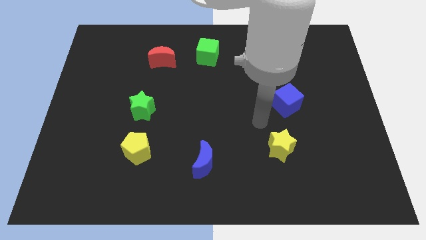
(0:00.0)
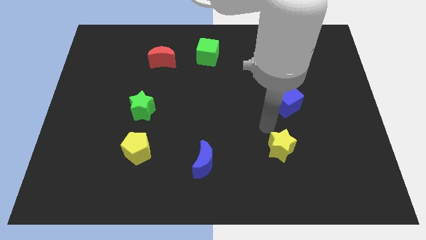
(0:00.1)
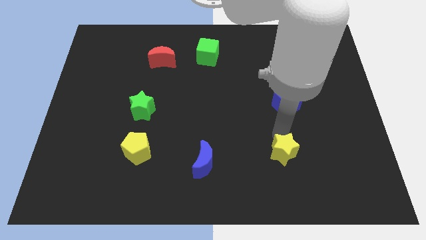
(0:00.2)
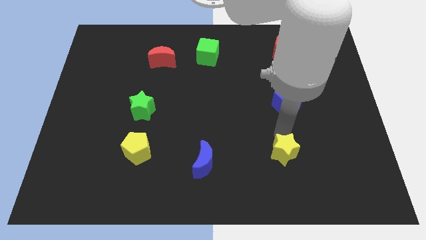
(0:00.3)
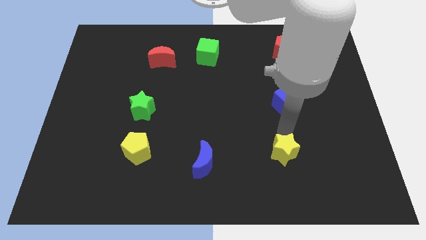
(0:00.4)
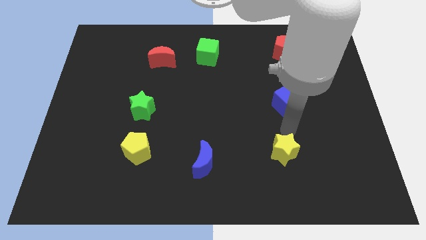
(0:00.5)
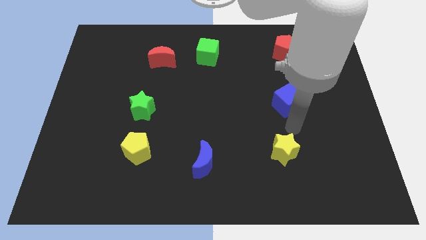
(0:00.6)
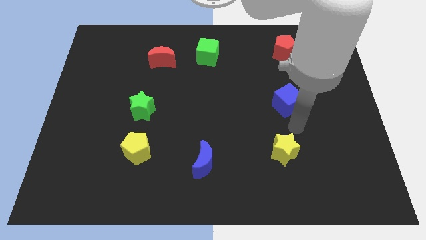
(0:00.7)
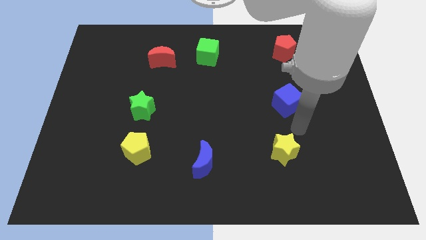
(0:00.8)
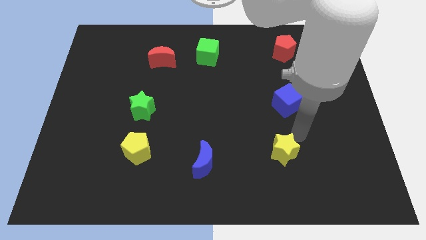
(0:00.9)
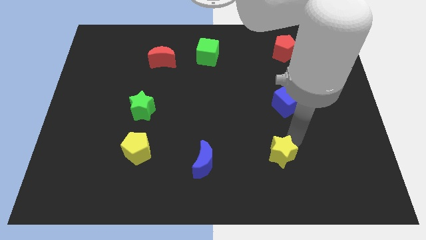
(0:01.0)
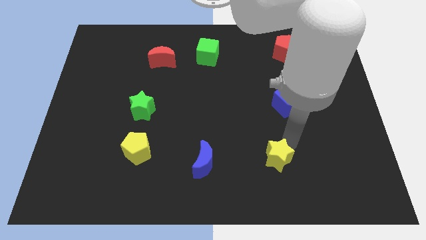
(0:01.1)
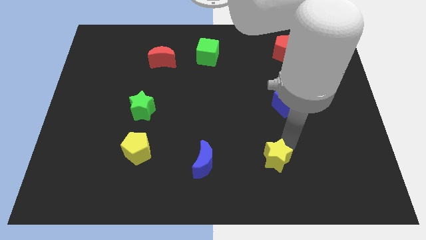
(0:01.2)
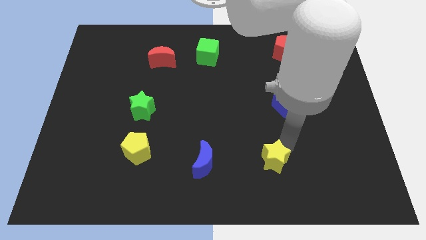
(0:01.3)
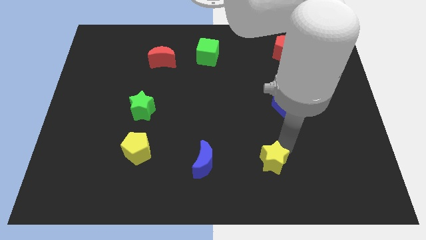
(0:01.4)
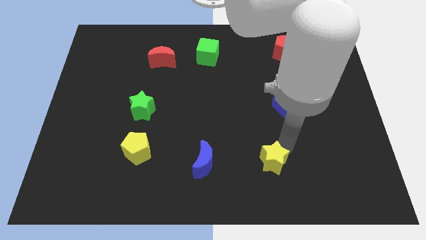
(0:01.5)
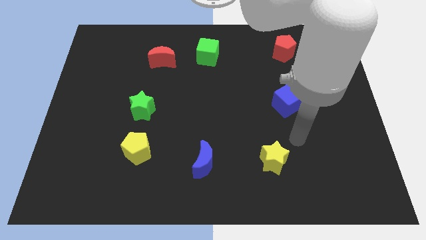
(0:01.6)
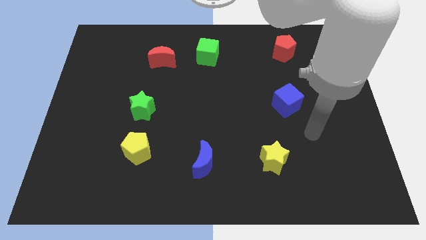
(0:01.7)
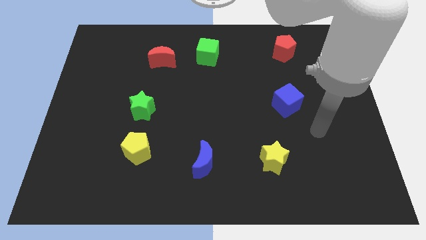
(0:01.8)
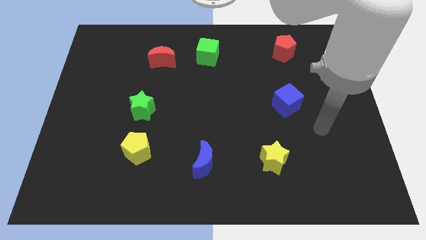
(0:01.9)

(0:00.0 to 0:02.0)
move the yellow star slightly towards bottom center of the board

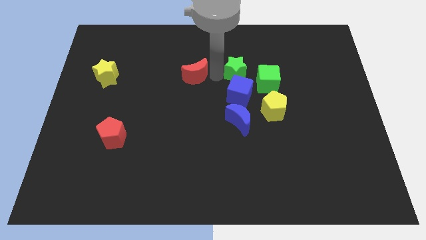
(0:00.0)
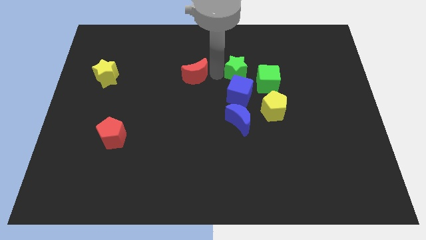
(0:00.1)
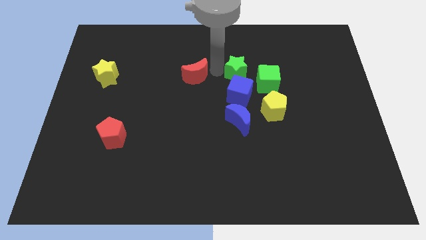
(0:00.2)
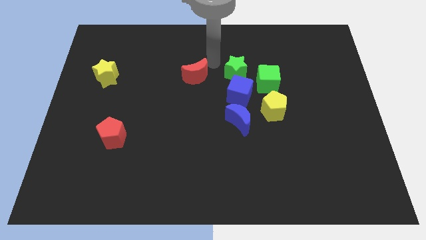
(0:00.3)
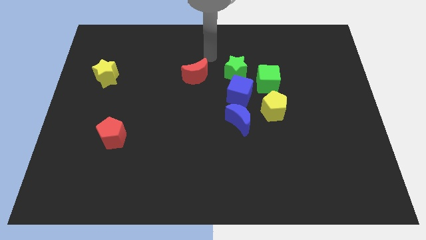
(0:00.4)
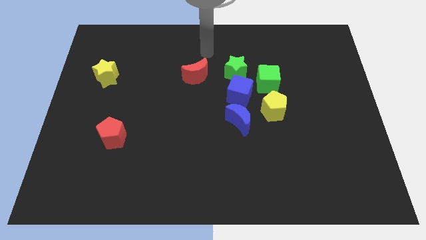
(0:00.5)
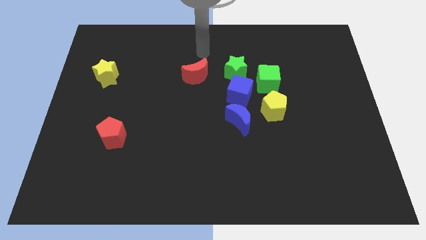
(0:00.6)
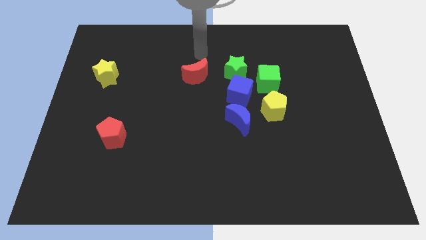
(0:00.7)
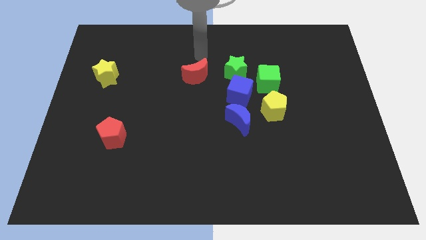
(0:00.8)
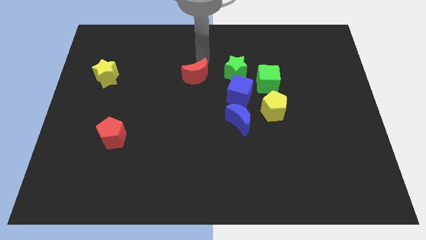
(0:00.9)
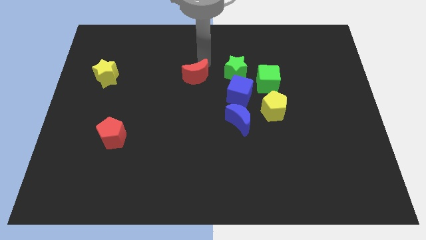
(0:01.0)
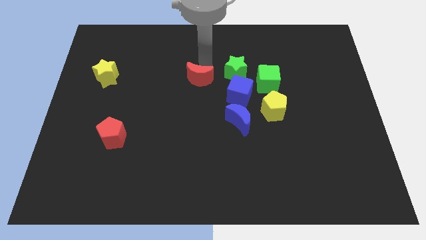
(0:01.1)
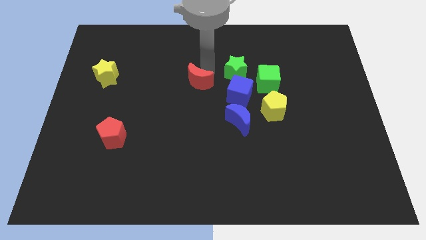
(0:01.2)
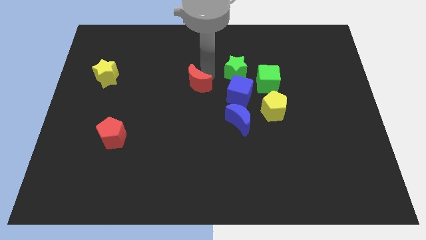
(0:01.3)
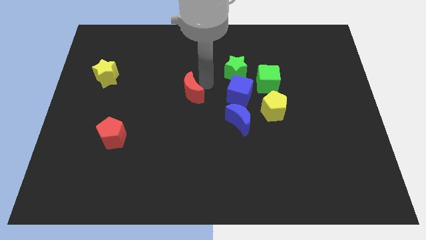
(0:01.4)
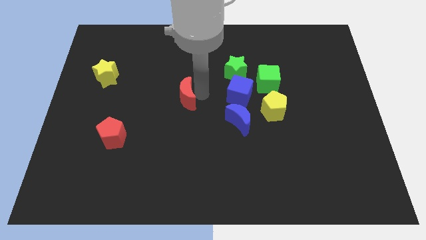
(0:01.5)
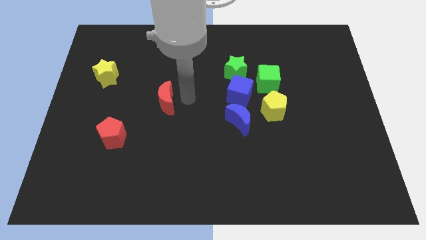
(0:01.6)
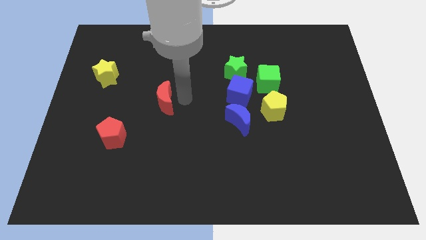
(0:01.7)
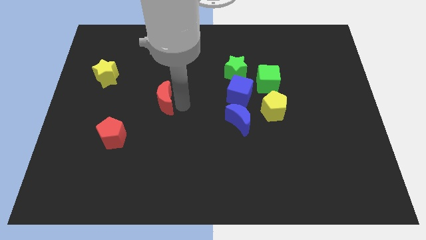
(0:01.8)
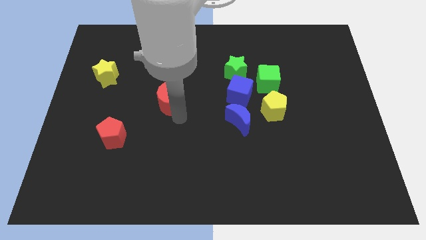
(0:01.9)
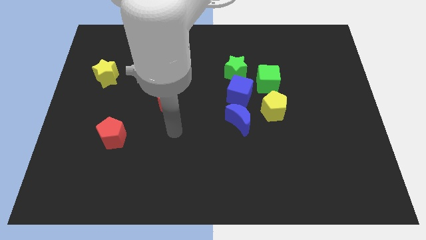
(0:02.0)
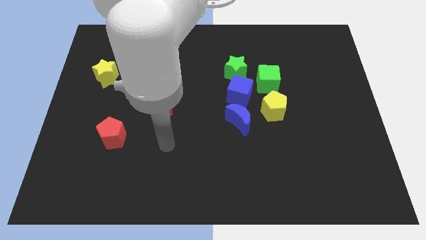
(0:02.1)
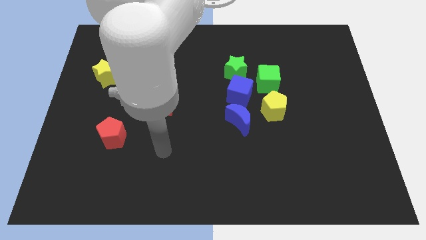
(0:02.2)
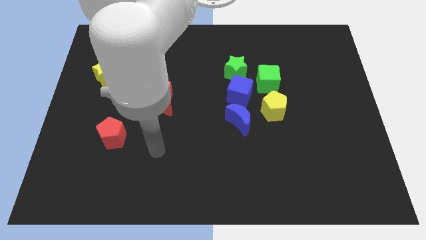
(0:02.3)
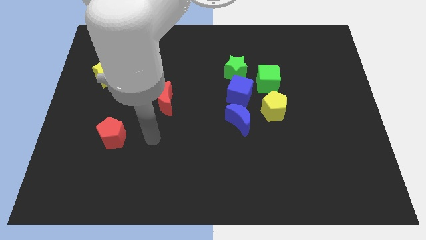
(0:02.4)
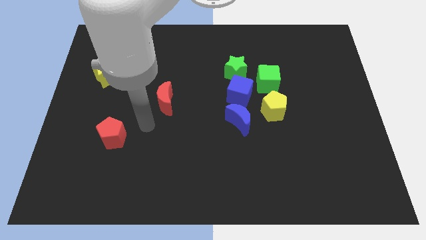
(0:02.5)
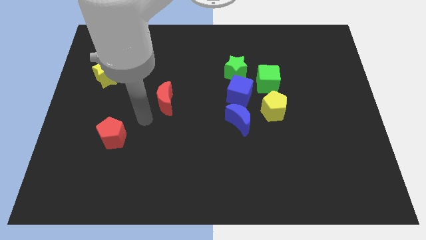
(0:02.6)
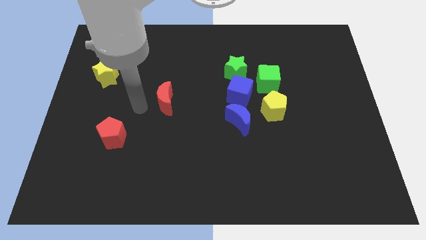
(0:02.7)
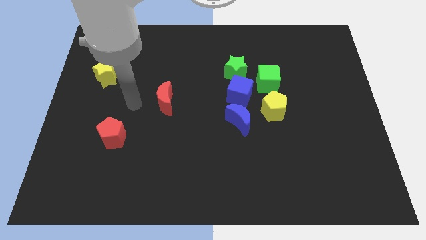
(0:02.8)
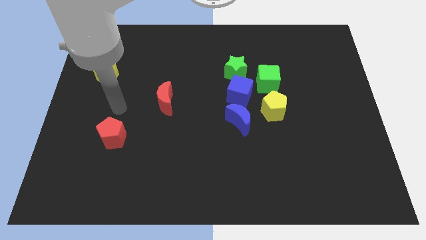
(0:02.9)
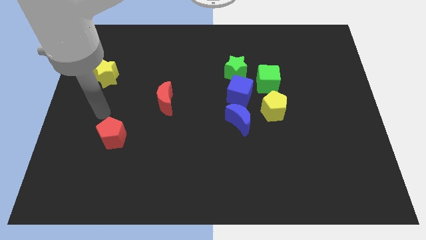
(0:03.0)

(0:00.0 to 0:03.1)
push the red crescent diagonally above the top side of the red pentagon

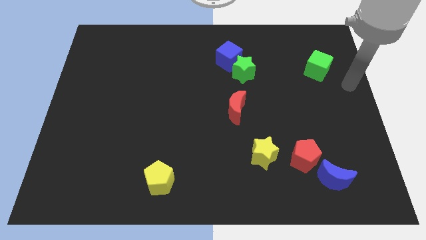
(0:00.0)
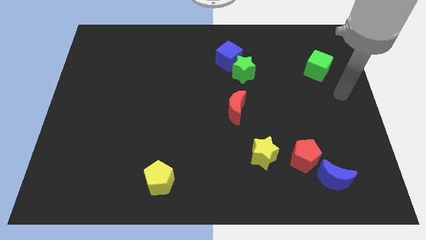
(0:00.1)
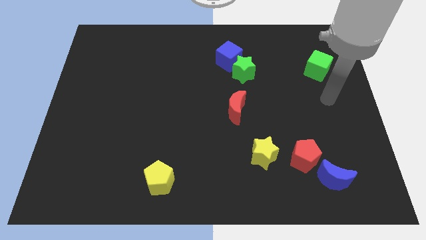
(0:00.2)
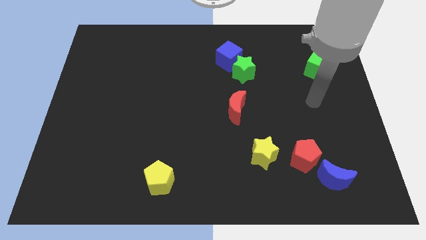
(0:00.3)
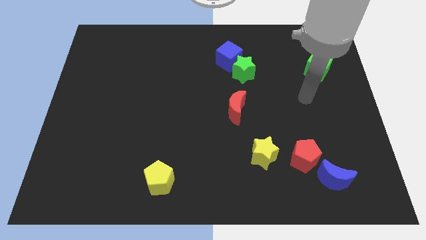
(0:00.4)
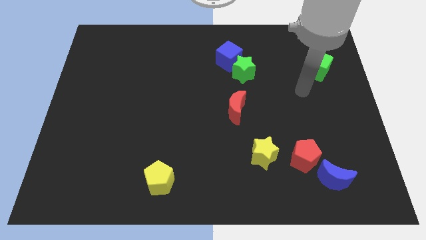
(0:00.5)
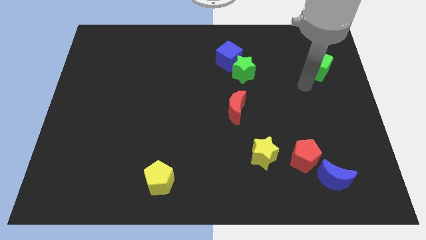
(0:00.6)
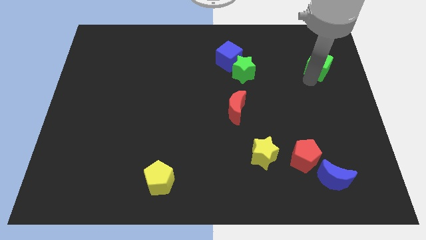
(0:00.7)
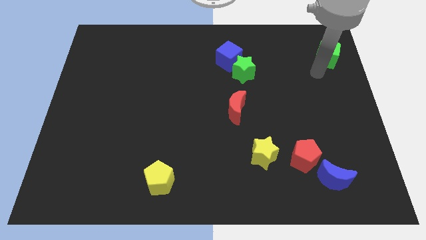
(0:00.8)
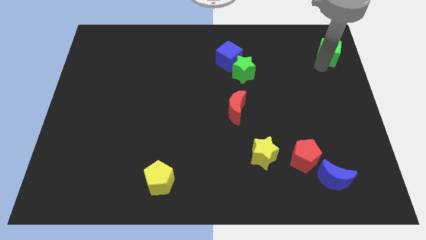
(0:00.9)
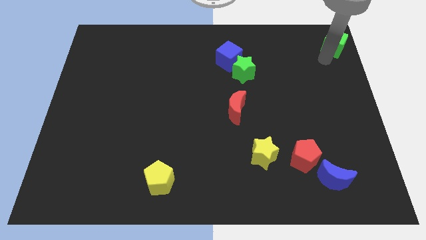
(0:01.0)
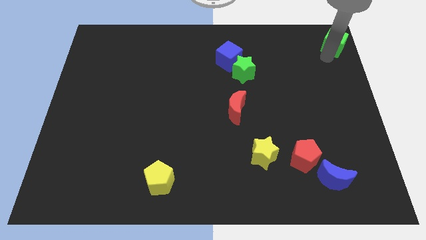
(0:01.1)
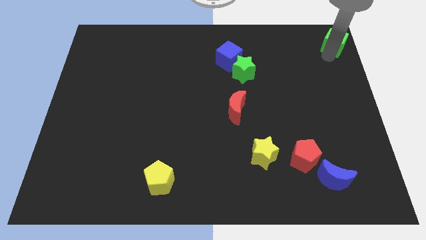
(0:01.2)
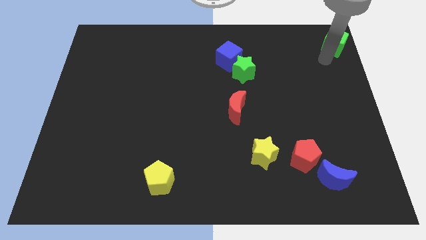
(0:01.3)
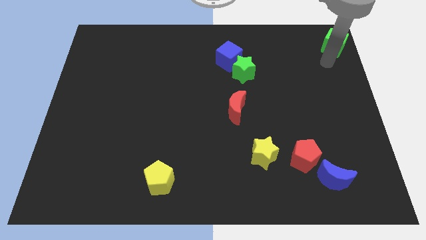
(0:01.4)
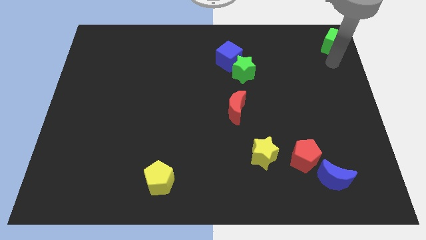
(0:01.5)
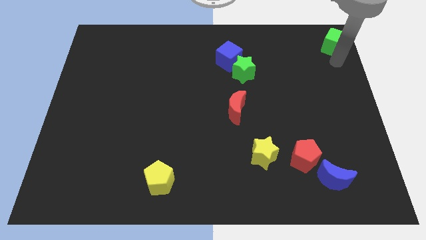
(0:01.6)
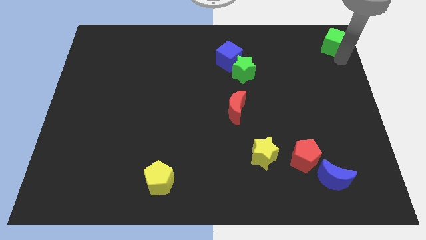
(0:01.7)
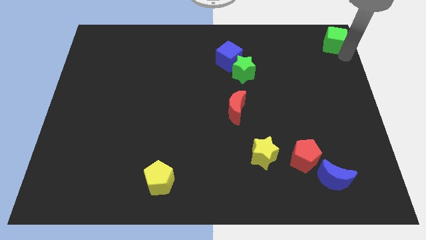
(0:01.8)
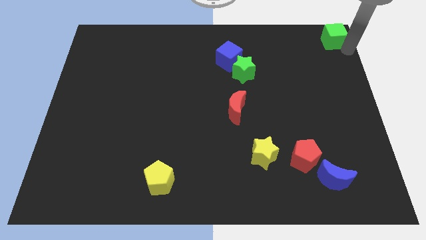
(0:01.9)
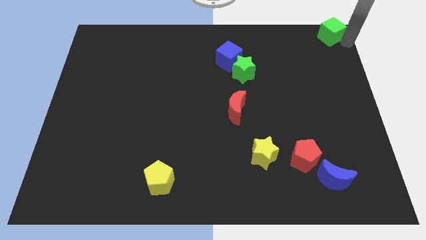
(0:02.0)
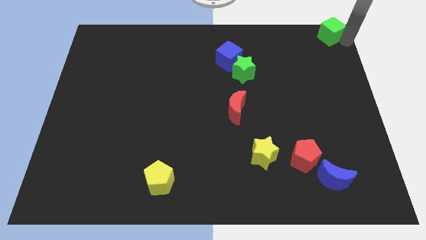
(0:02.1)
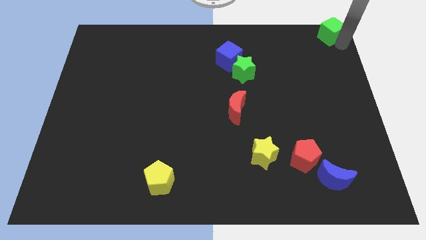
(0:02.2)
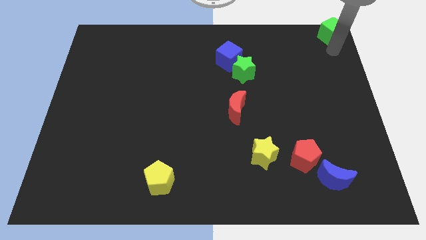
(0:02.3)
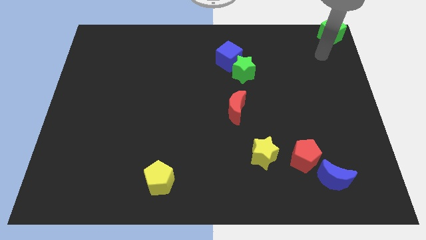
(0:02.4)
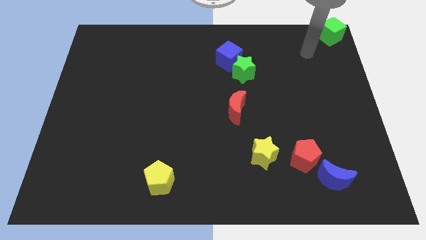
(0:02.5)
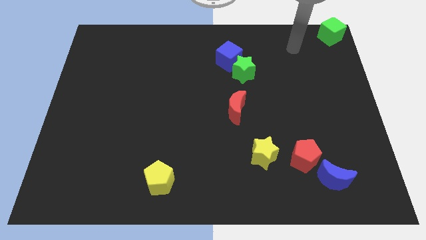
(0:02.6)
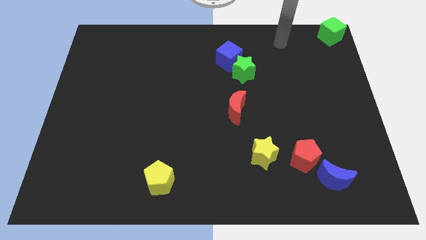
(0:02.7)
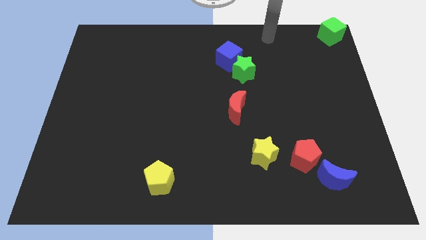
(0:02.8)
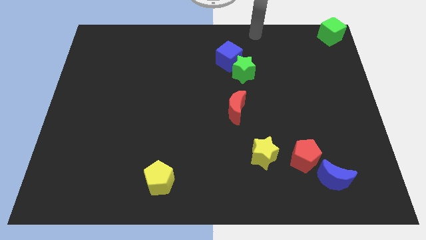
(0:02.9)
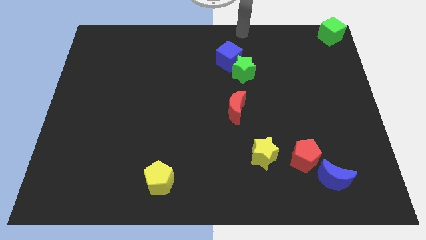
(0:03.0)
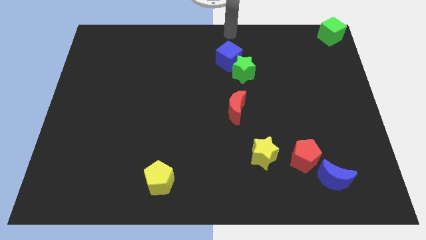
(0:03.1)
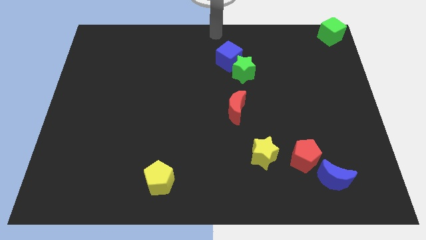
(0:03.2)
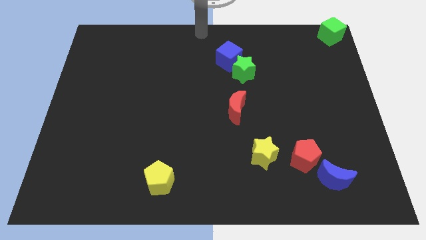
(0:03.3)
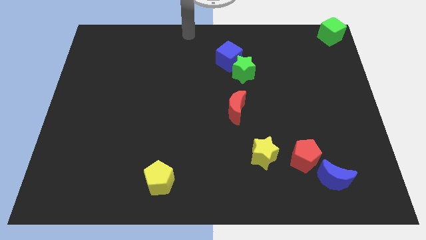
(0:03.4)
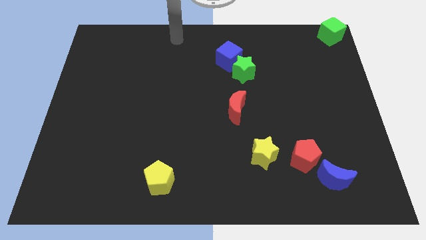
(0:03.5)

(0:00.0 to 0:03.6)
move the green cube to the top right

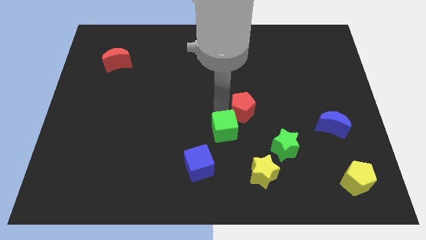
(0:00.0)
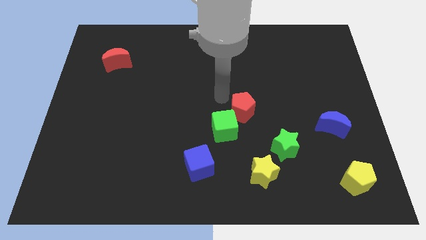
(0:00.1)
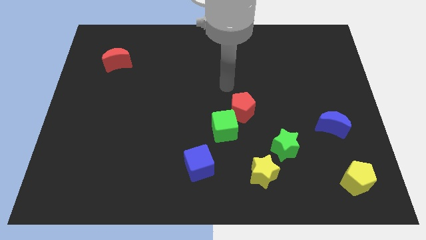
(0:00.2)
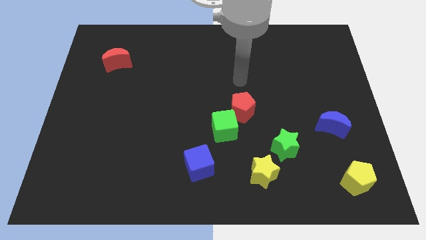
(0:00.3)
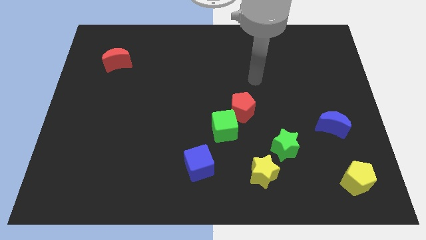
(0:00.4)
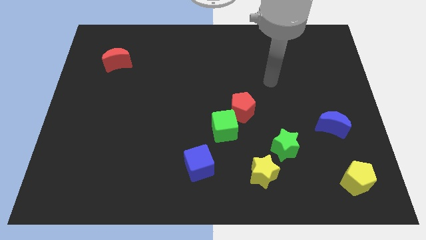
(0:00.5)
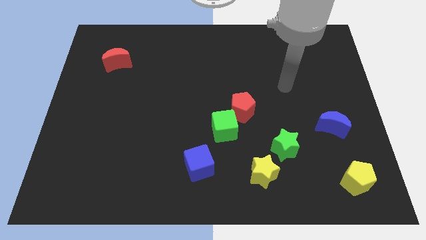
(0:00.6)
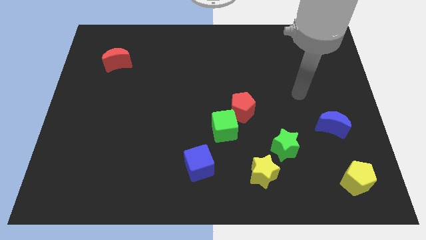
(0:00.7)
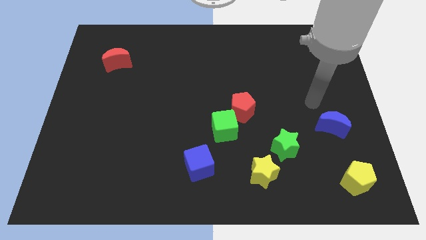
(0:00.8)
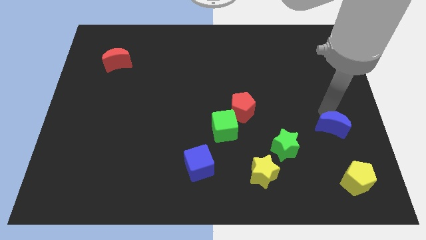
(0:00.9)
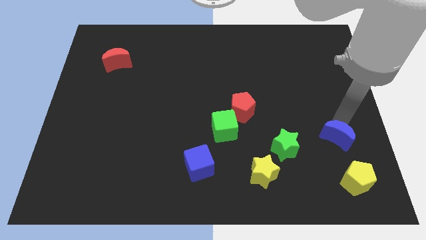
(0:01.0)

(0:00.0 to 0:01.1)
tap the blue crescent
